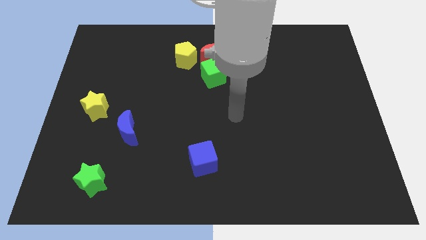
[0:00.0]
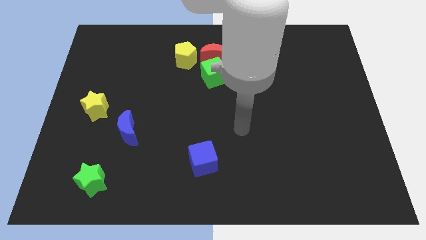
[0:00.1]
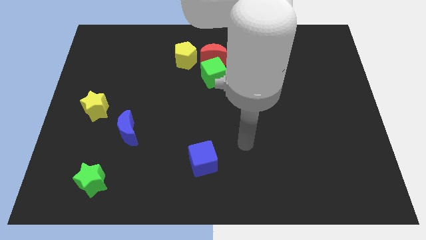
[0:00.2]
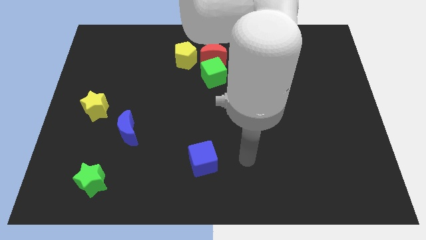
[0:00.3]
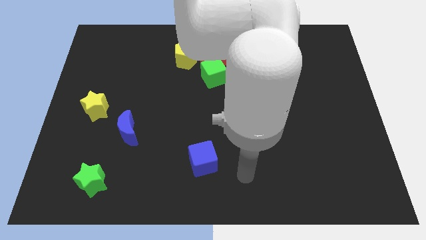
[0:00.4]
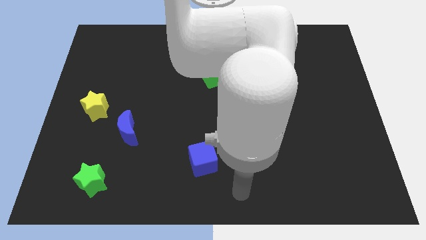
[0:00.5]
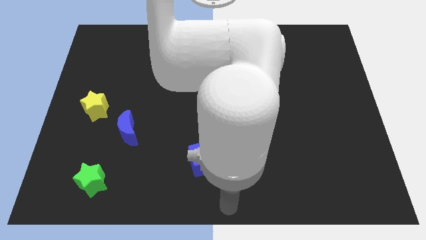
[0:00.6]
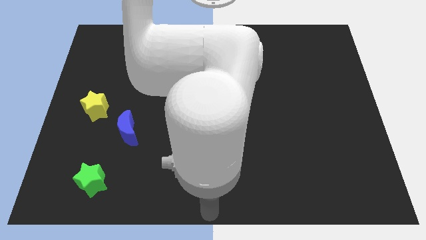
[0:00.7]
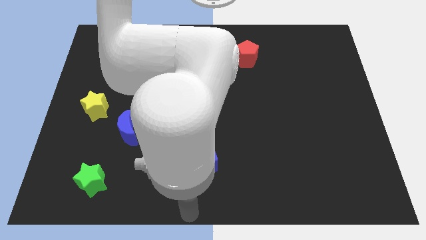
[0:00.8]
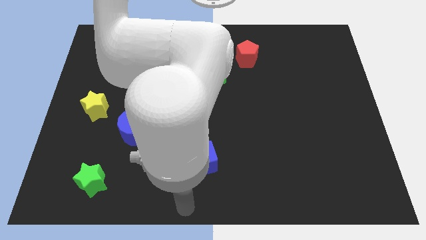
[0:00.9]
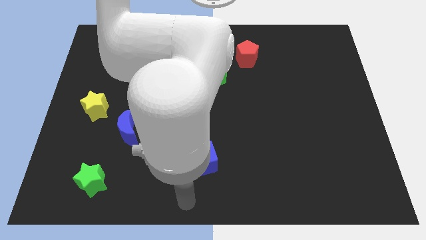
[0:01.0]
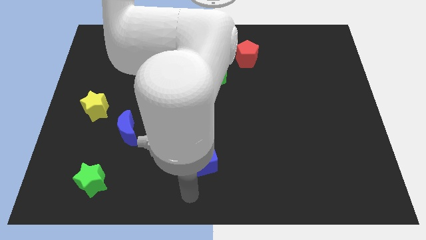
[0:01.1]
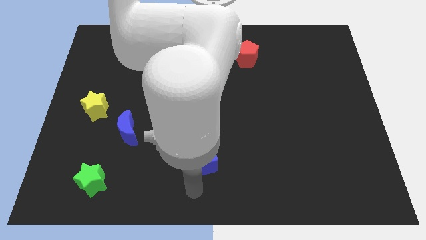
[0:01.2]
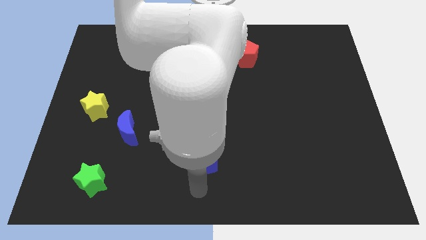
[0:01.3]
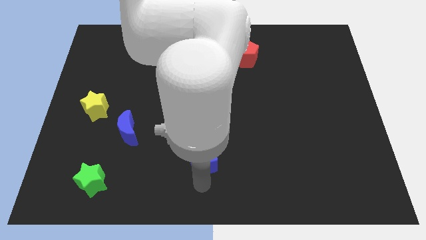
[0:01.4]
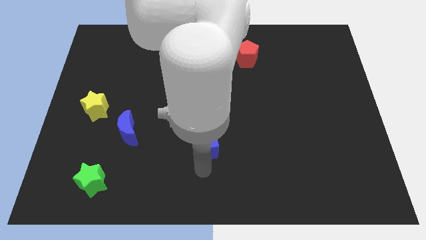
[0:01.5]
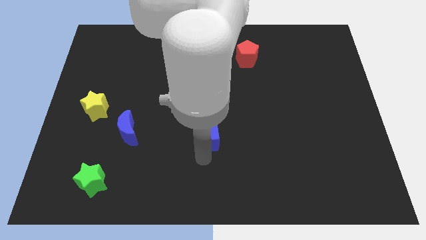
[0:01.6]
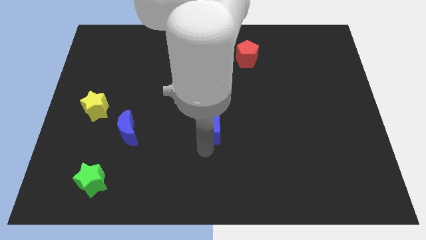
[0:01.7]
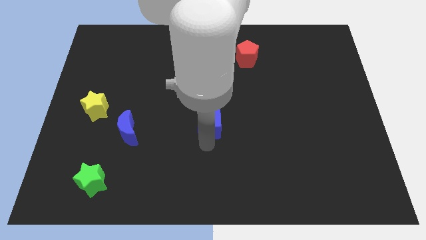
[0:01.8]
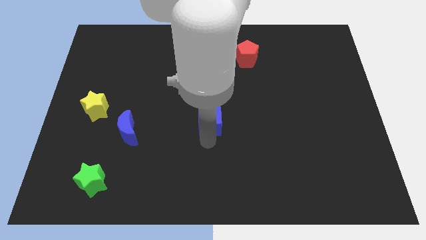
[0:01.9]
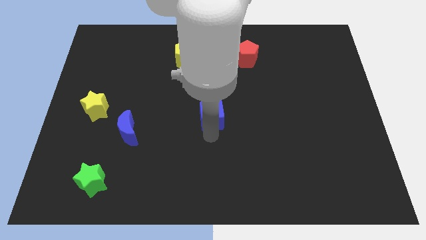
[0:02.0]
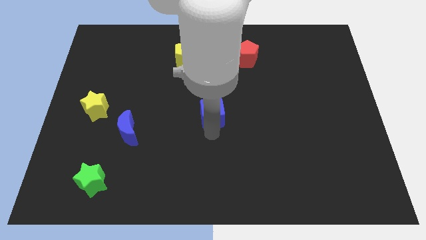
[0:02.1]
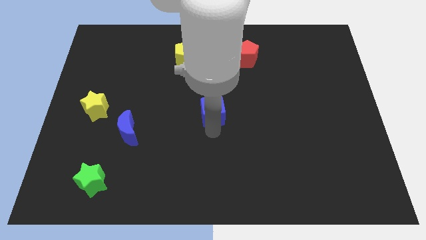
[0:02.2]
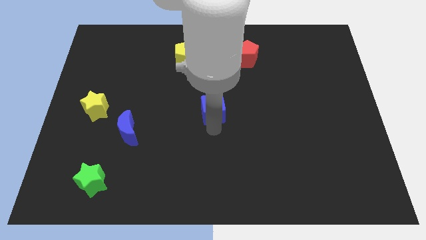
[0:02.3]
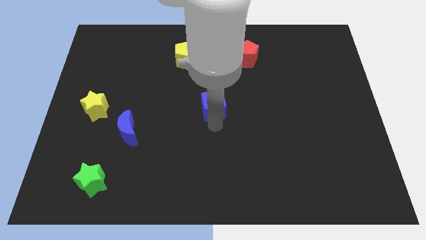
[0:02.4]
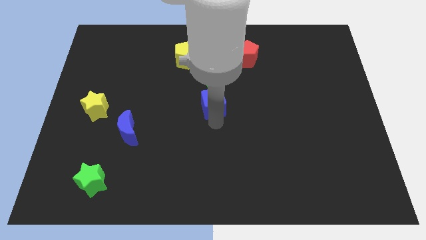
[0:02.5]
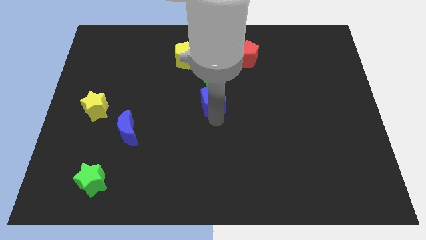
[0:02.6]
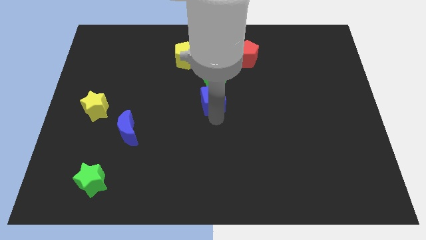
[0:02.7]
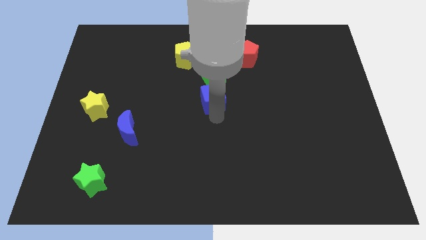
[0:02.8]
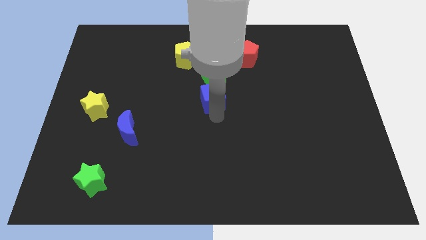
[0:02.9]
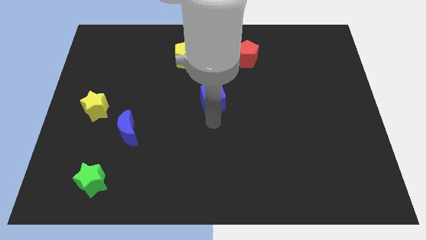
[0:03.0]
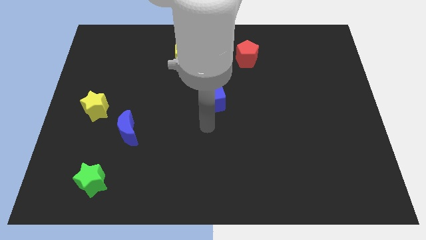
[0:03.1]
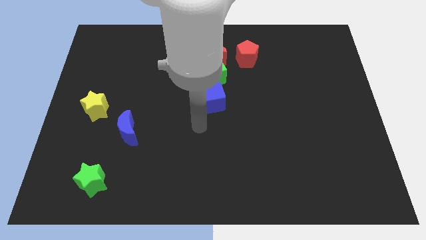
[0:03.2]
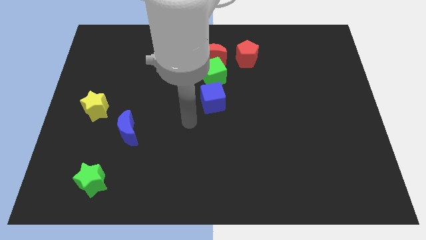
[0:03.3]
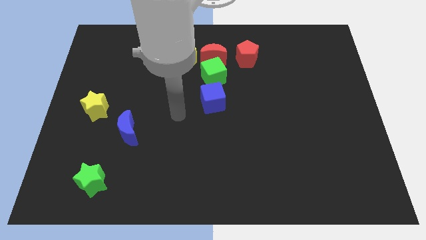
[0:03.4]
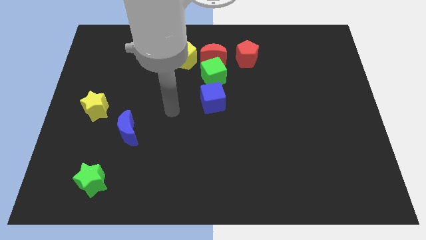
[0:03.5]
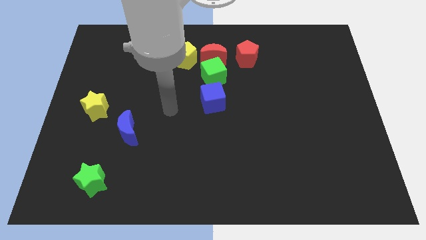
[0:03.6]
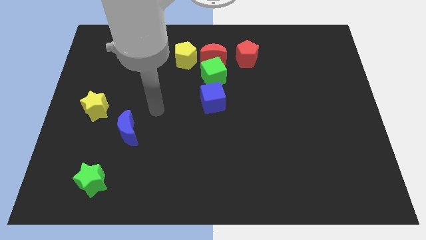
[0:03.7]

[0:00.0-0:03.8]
place the blue cube to the bottom of the green cube

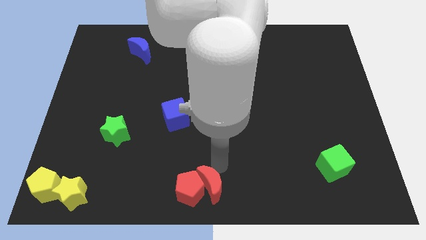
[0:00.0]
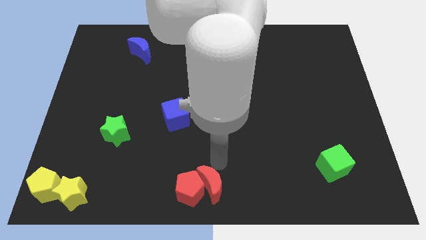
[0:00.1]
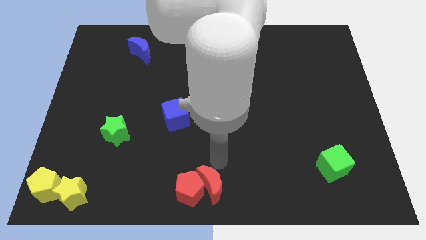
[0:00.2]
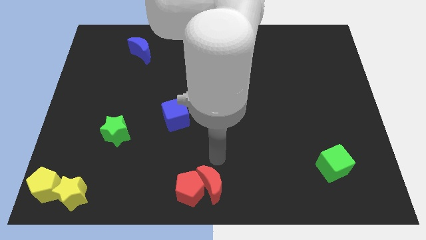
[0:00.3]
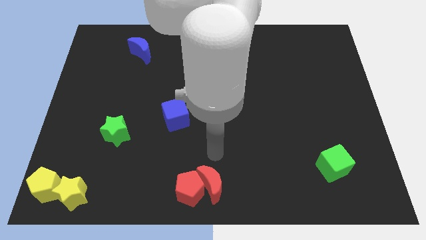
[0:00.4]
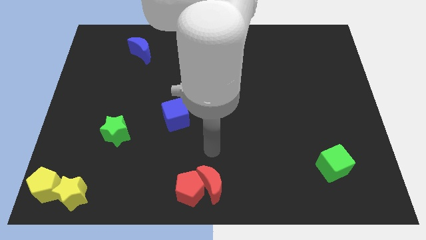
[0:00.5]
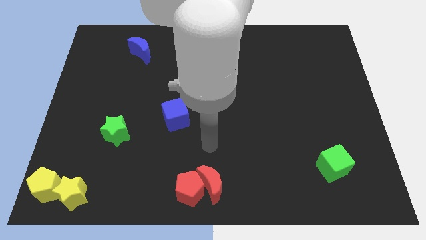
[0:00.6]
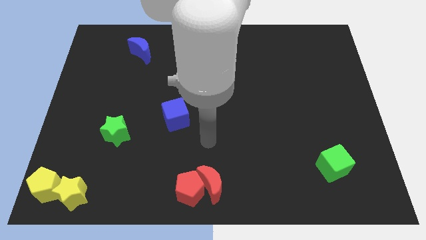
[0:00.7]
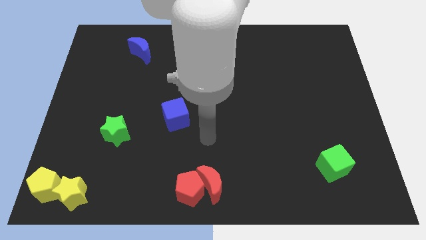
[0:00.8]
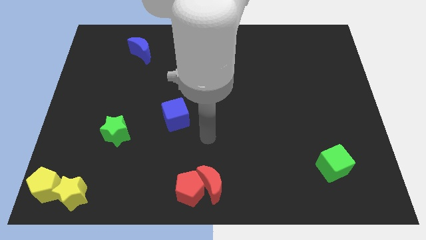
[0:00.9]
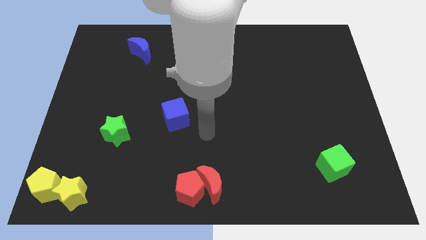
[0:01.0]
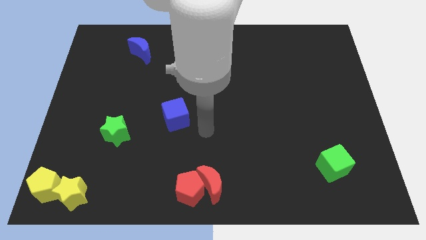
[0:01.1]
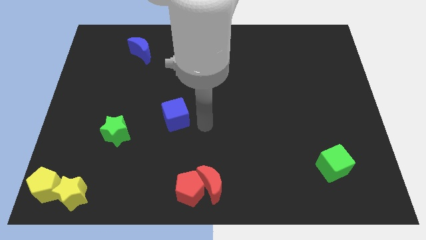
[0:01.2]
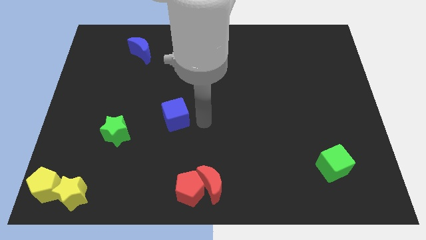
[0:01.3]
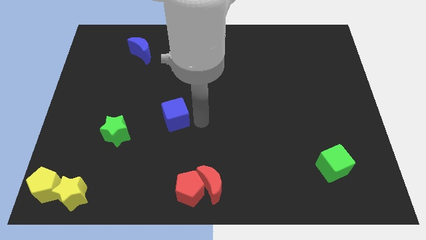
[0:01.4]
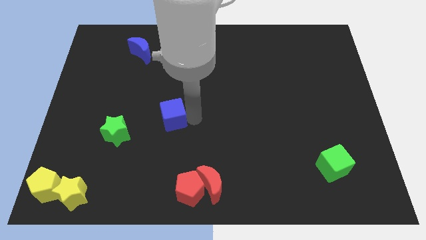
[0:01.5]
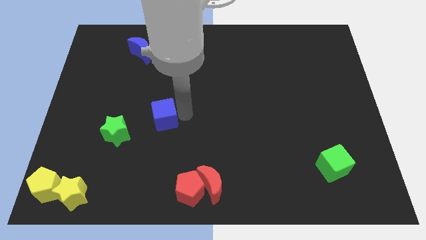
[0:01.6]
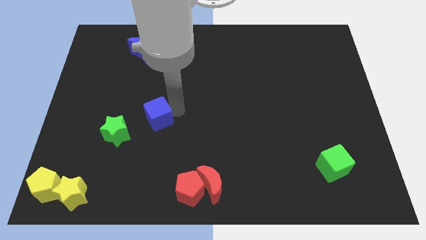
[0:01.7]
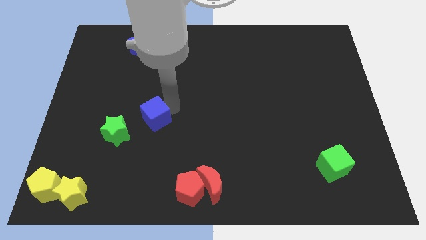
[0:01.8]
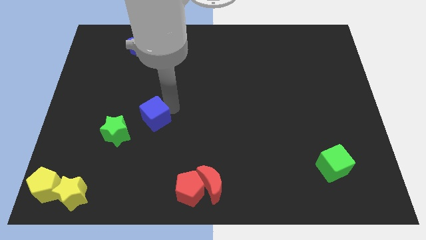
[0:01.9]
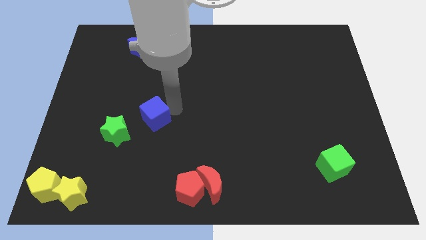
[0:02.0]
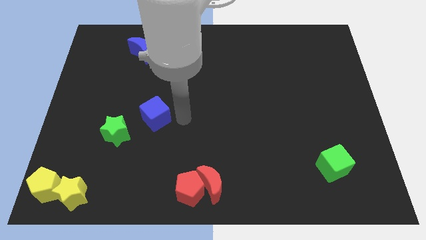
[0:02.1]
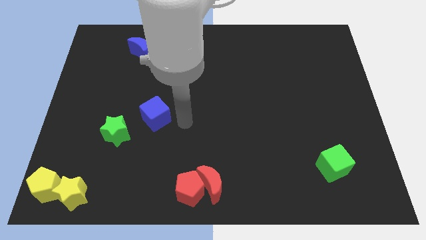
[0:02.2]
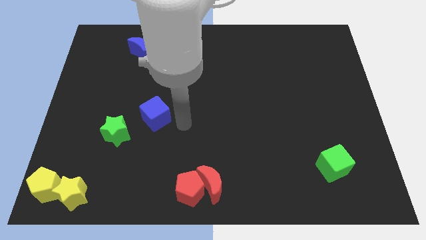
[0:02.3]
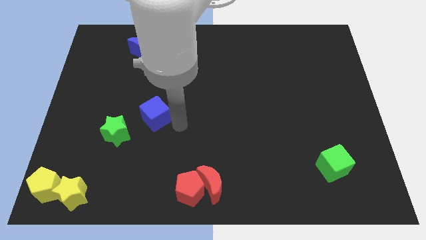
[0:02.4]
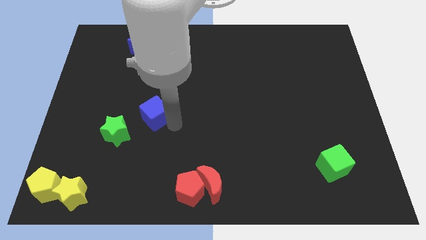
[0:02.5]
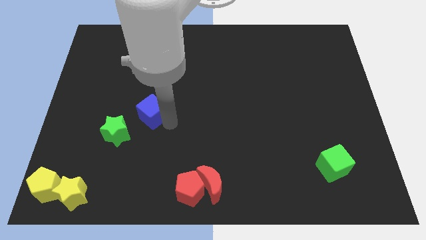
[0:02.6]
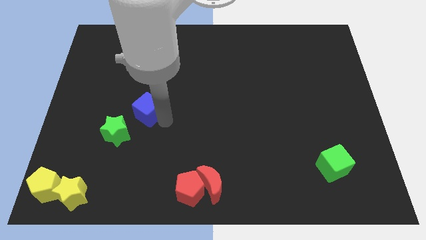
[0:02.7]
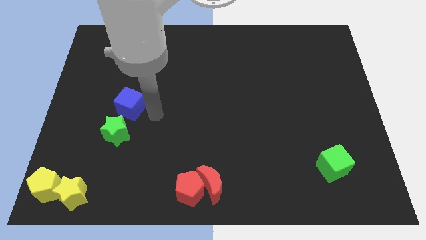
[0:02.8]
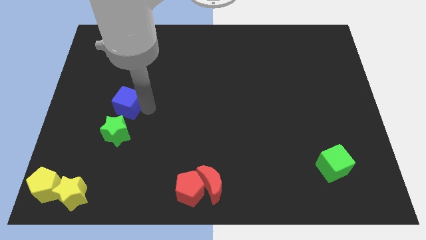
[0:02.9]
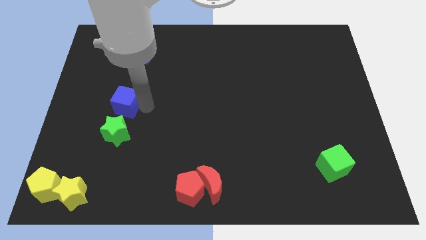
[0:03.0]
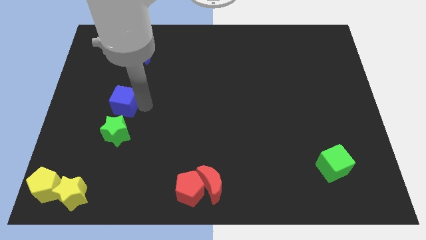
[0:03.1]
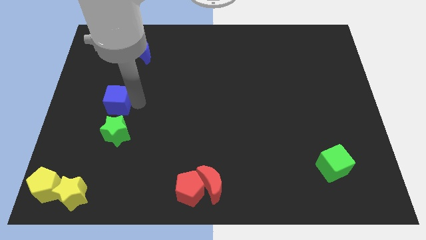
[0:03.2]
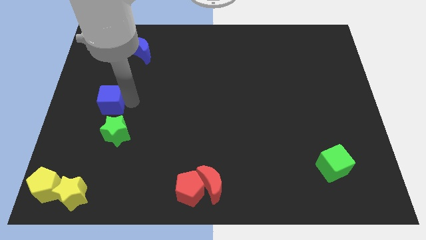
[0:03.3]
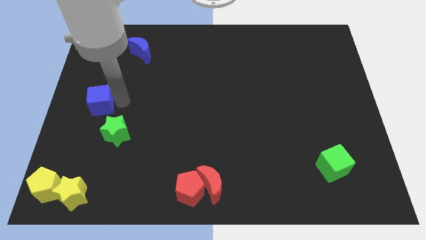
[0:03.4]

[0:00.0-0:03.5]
place blue cube to the top of green star

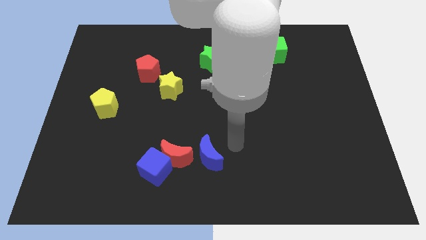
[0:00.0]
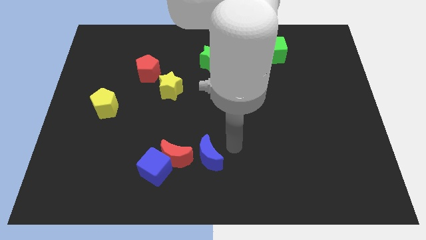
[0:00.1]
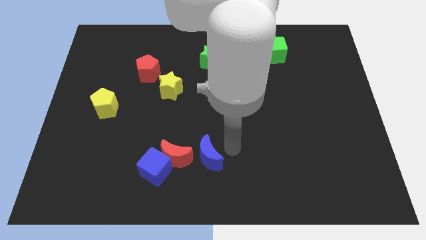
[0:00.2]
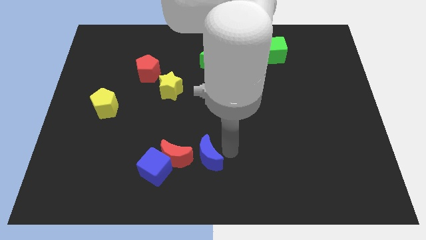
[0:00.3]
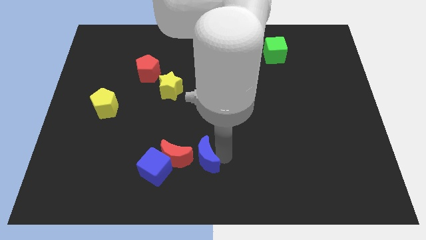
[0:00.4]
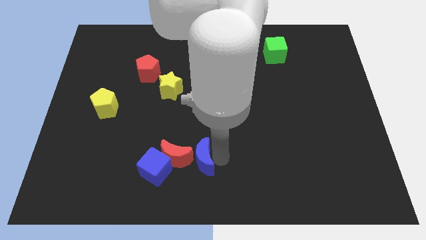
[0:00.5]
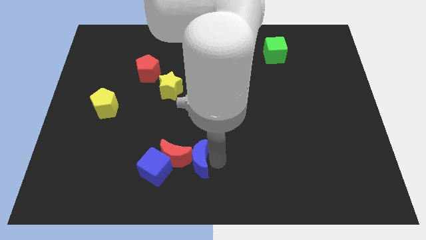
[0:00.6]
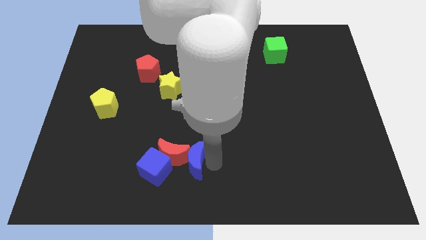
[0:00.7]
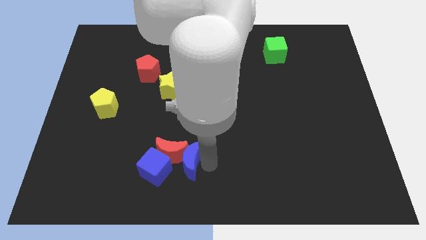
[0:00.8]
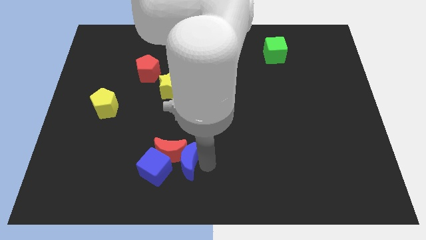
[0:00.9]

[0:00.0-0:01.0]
push the blue moon into the red moon

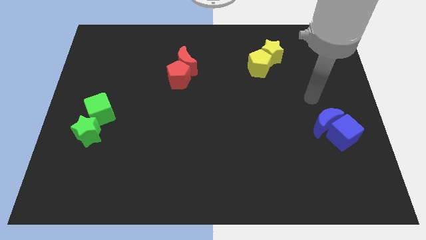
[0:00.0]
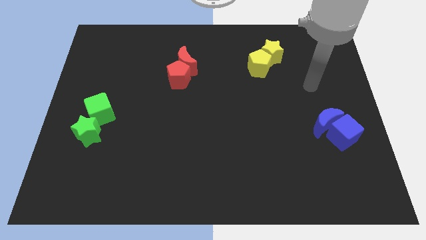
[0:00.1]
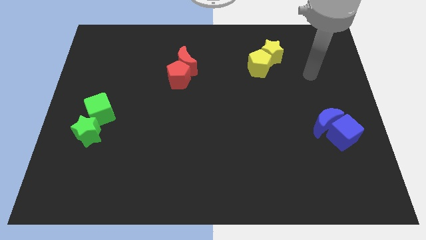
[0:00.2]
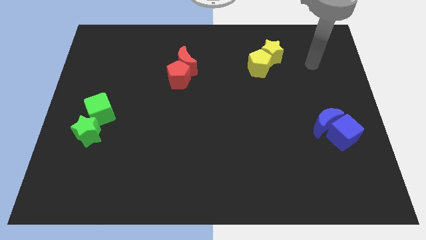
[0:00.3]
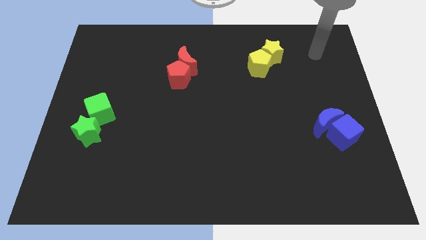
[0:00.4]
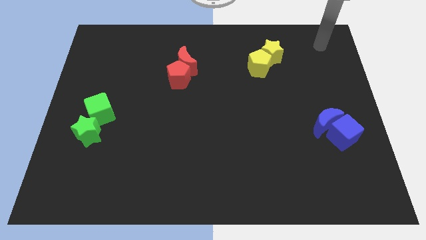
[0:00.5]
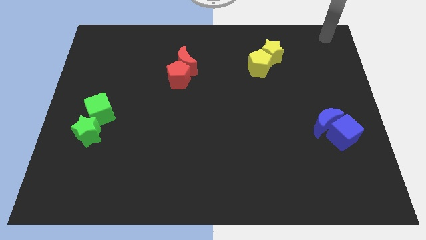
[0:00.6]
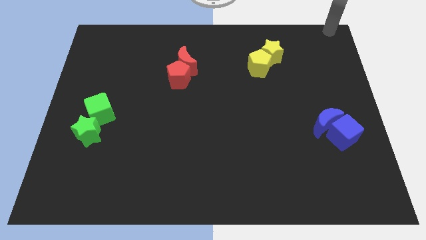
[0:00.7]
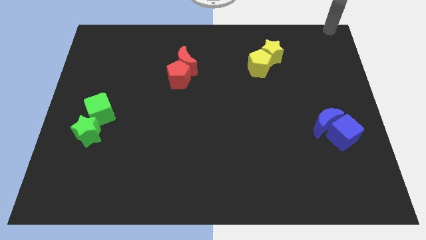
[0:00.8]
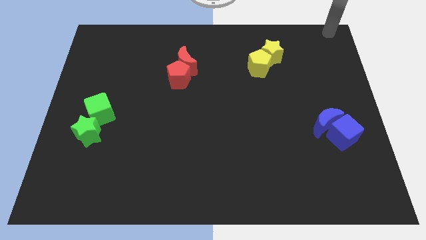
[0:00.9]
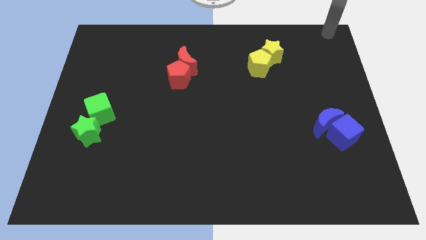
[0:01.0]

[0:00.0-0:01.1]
move your arm away from the blue moon
